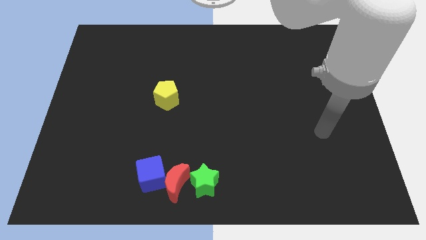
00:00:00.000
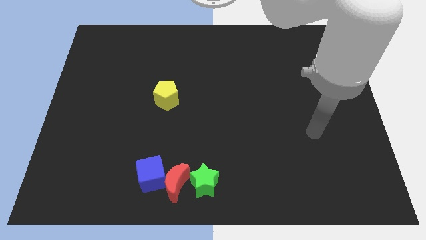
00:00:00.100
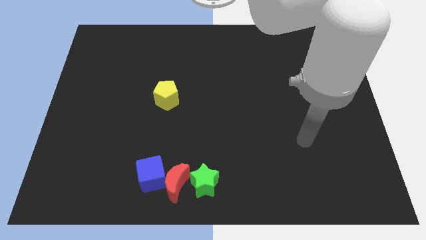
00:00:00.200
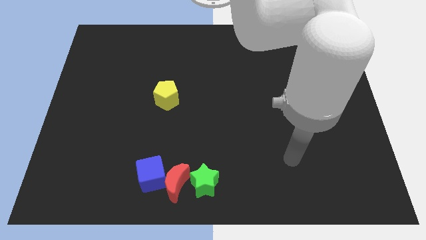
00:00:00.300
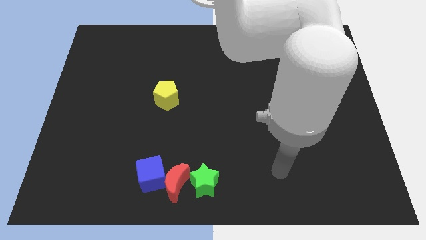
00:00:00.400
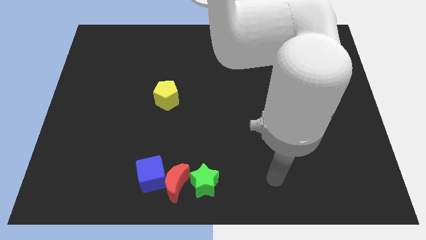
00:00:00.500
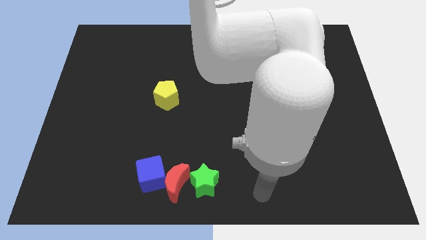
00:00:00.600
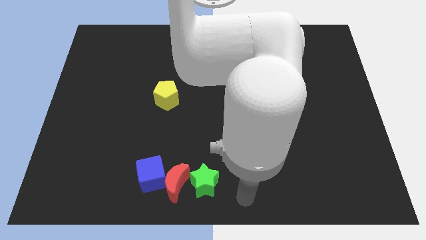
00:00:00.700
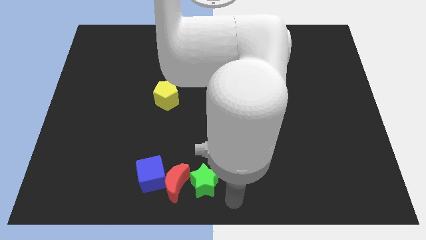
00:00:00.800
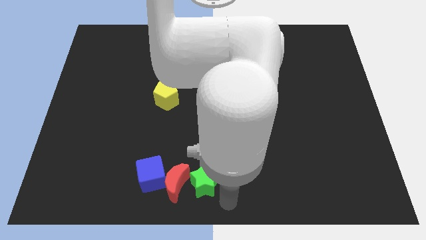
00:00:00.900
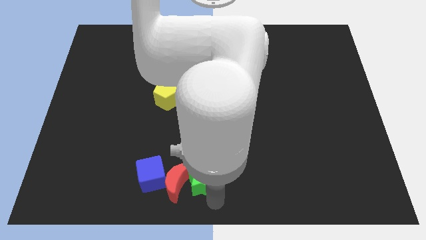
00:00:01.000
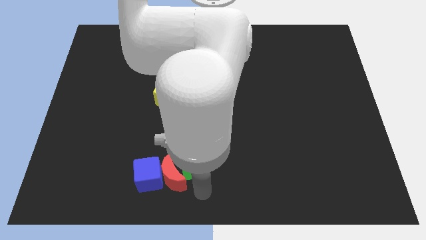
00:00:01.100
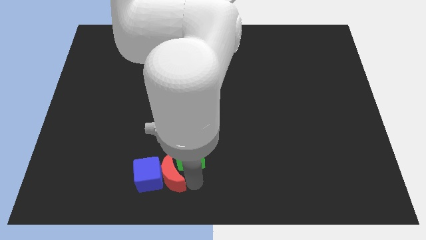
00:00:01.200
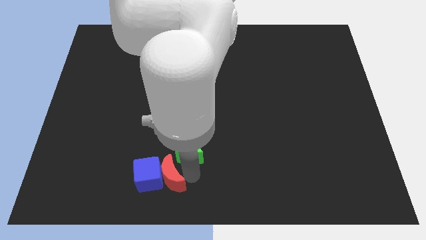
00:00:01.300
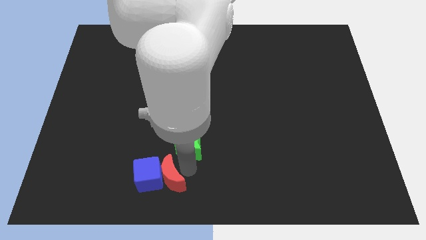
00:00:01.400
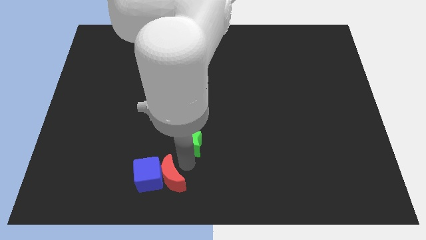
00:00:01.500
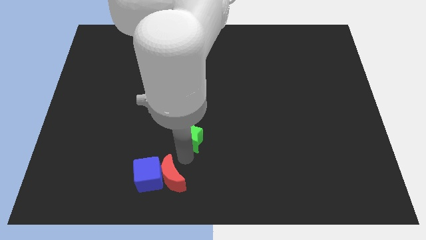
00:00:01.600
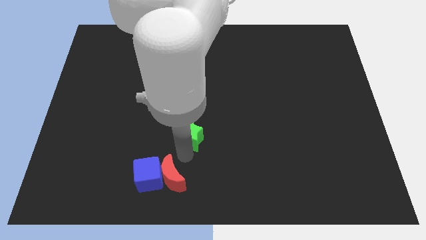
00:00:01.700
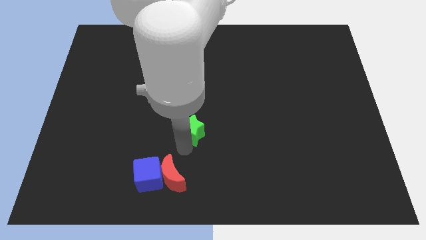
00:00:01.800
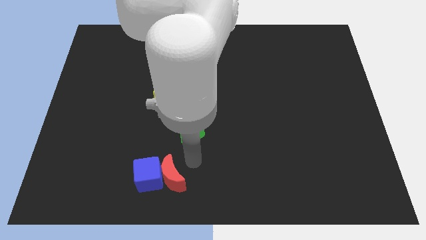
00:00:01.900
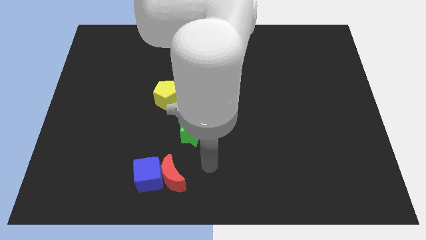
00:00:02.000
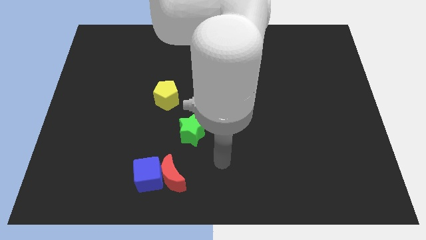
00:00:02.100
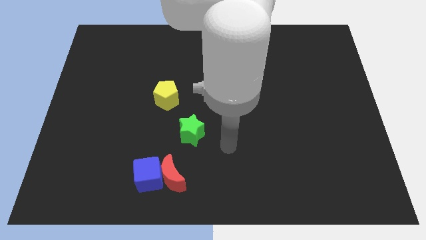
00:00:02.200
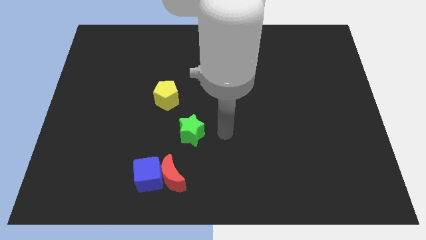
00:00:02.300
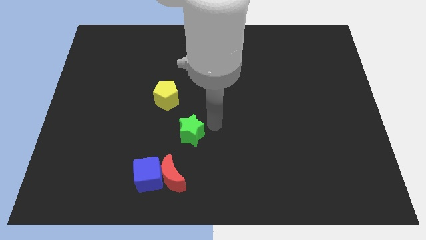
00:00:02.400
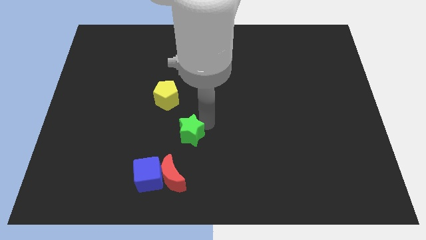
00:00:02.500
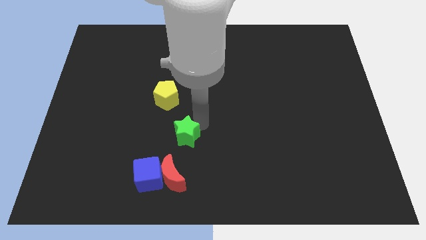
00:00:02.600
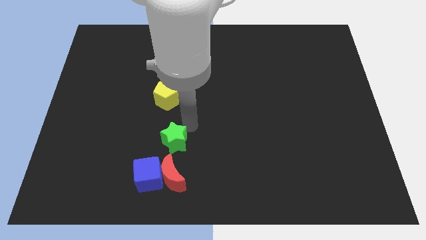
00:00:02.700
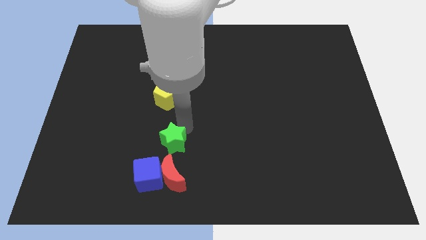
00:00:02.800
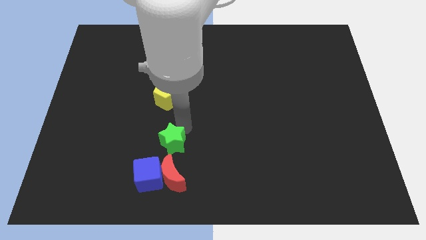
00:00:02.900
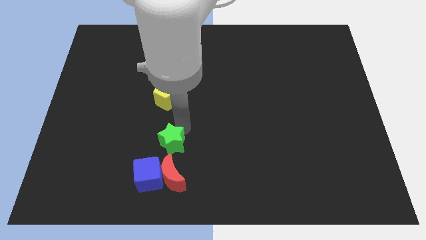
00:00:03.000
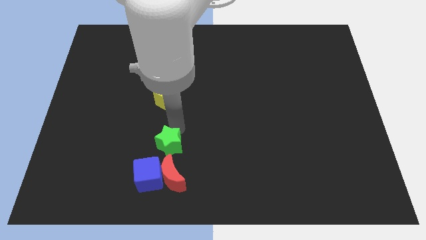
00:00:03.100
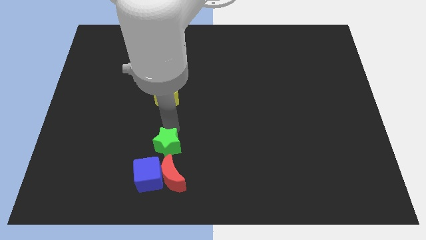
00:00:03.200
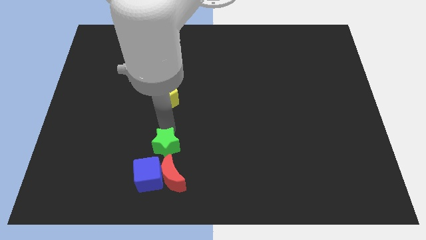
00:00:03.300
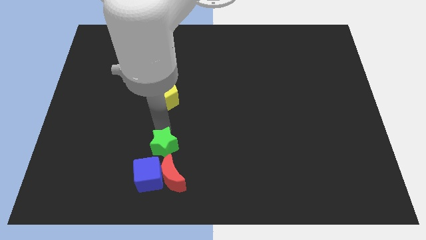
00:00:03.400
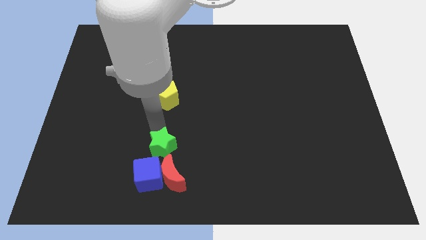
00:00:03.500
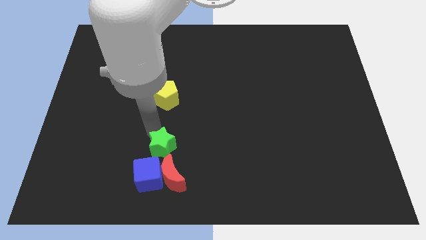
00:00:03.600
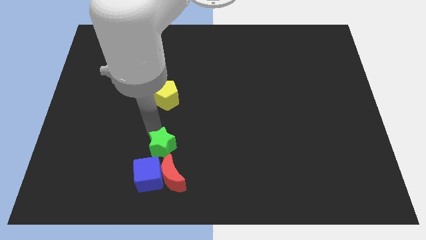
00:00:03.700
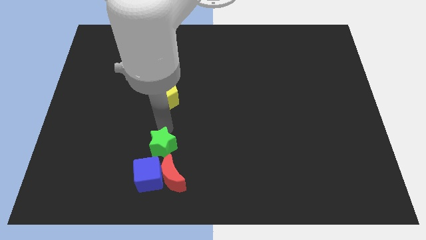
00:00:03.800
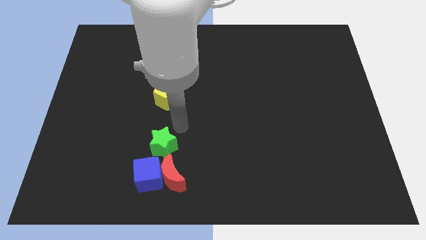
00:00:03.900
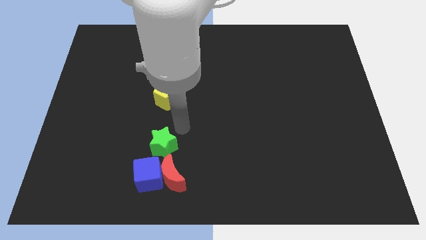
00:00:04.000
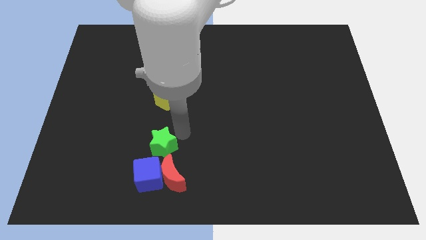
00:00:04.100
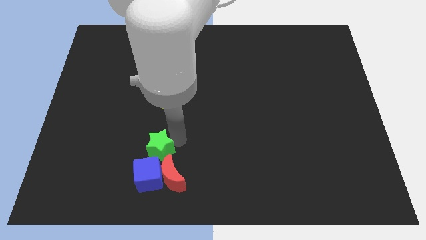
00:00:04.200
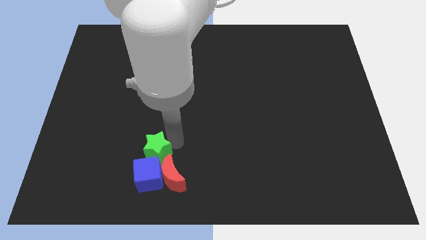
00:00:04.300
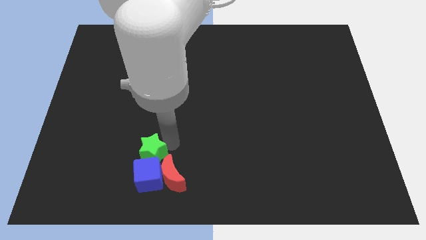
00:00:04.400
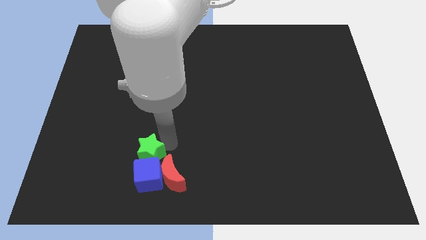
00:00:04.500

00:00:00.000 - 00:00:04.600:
push the green block to the blue cube

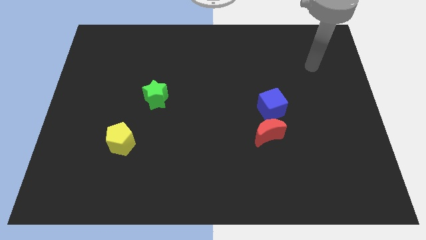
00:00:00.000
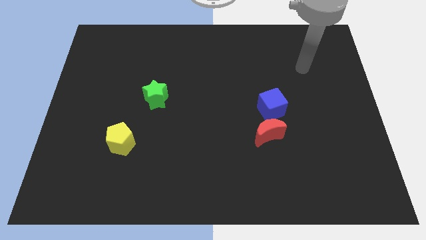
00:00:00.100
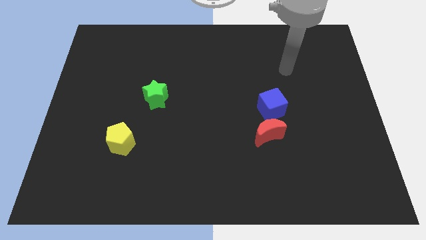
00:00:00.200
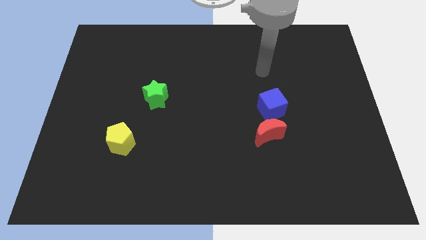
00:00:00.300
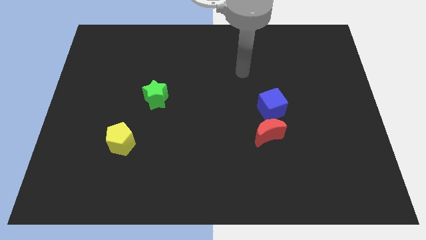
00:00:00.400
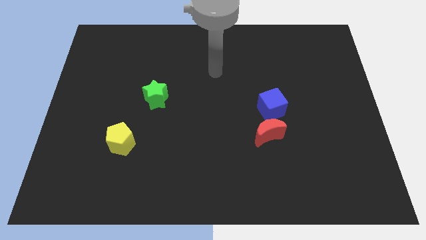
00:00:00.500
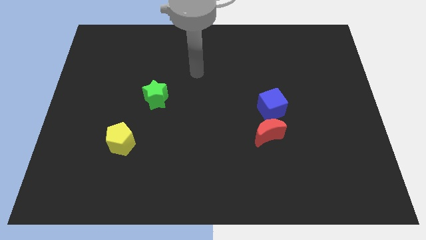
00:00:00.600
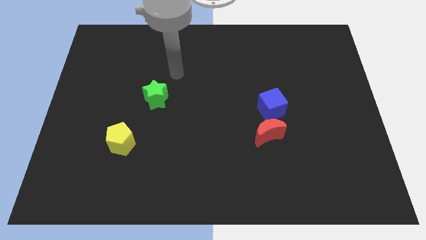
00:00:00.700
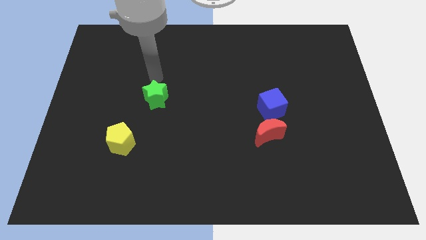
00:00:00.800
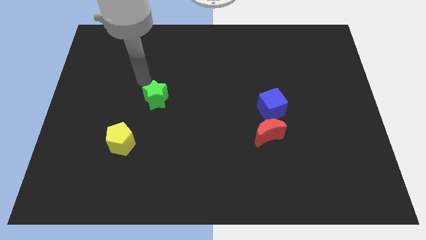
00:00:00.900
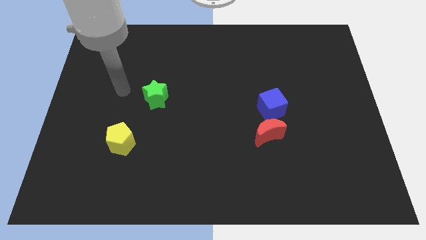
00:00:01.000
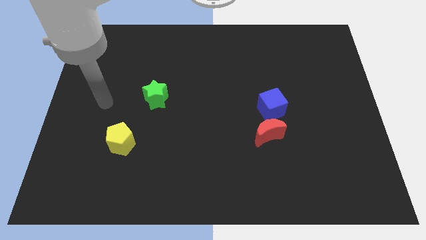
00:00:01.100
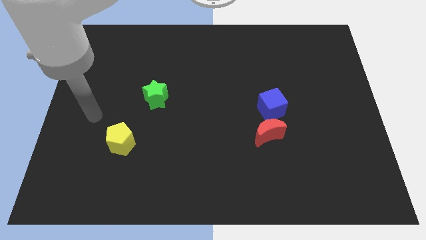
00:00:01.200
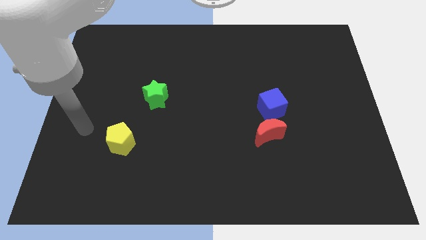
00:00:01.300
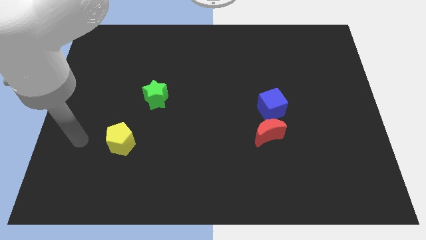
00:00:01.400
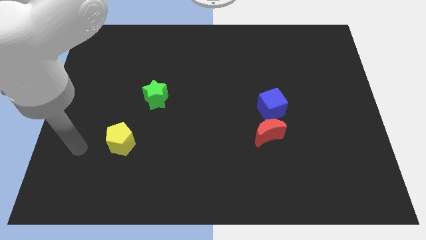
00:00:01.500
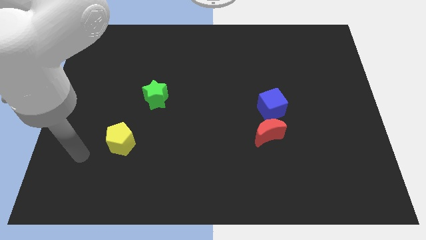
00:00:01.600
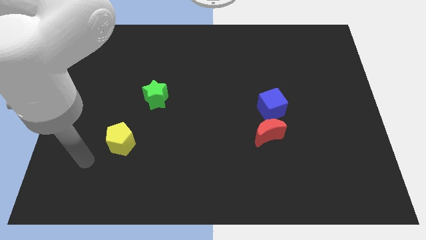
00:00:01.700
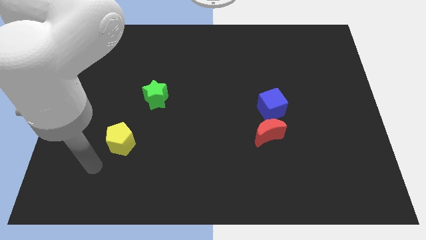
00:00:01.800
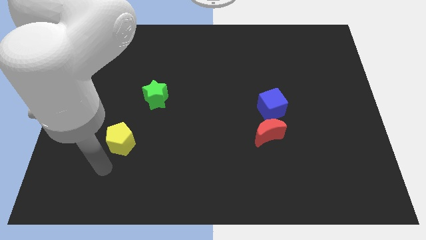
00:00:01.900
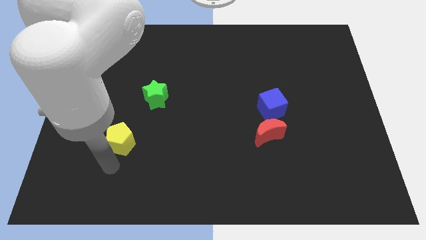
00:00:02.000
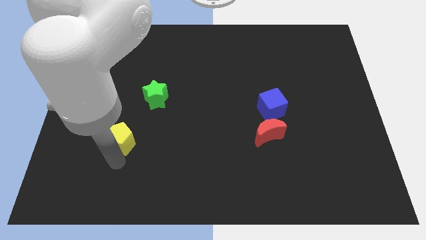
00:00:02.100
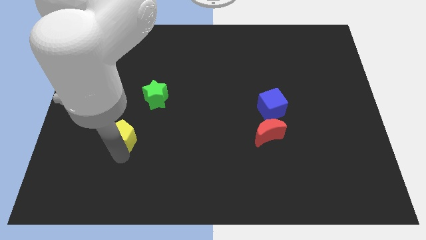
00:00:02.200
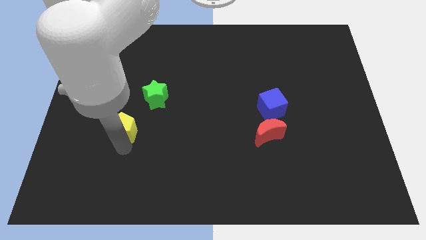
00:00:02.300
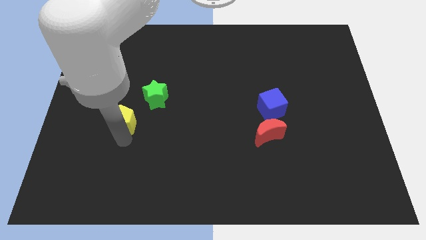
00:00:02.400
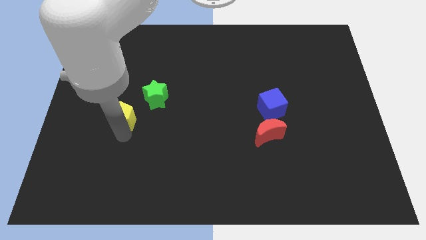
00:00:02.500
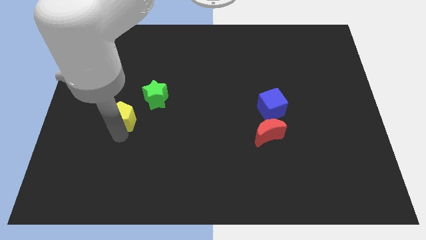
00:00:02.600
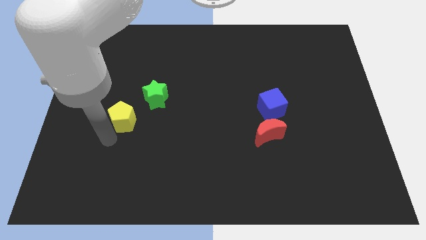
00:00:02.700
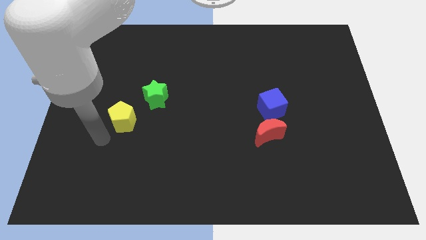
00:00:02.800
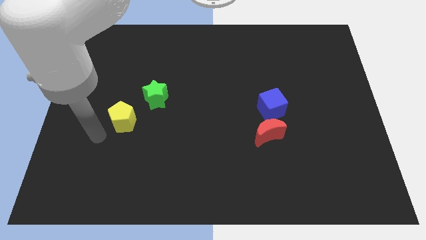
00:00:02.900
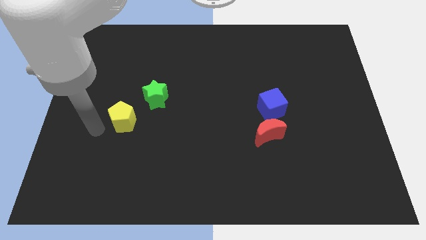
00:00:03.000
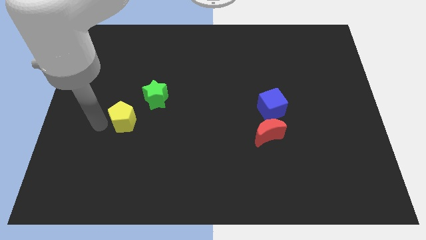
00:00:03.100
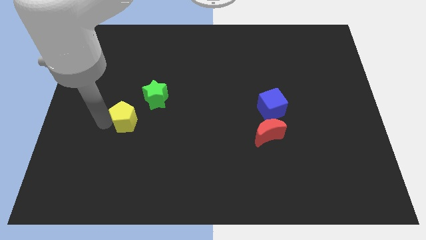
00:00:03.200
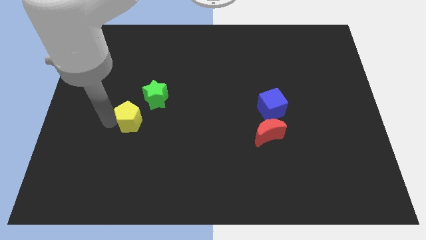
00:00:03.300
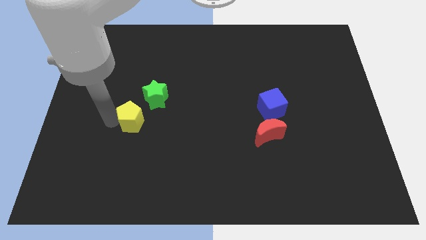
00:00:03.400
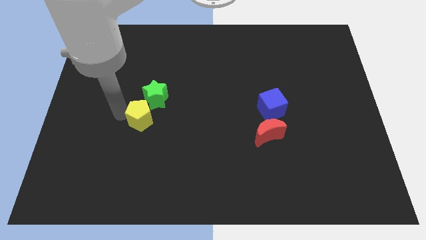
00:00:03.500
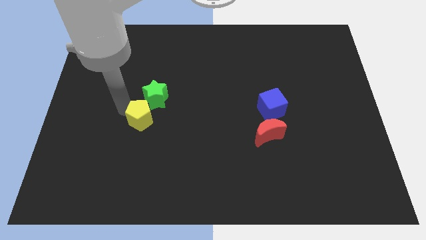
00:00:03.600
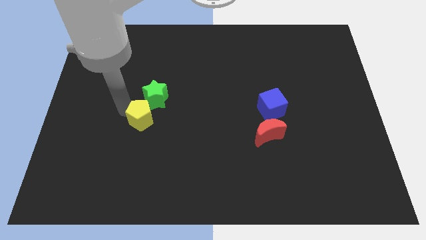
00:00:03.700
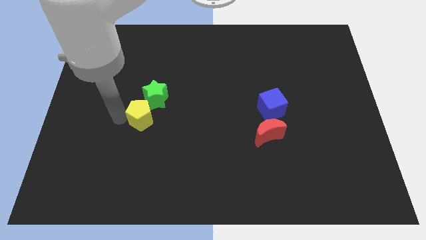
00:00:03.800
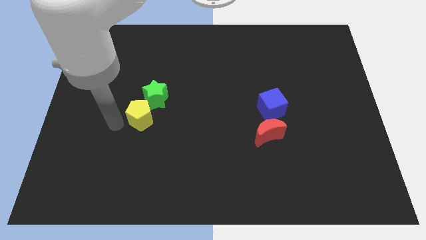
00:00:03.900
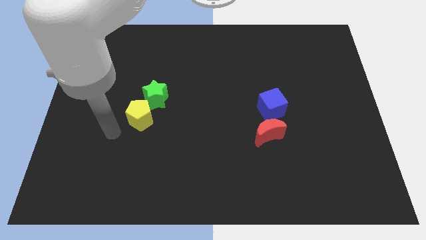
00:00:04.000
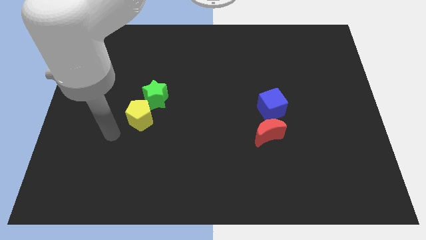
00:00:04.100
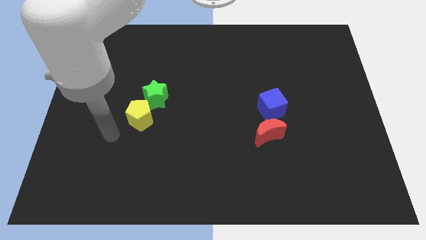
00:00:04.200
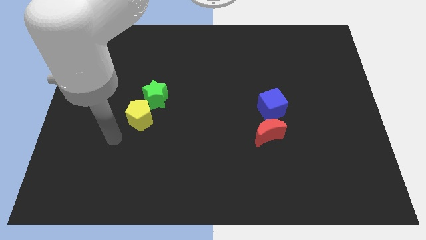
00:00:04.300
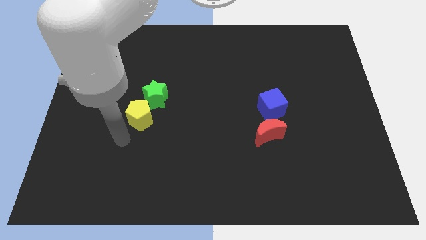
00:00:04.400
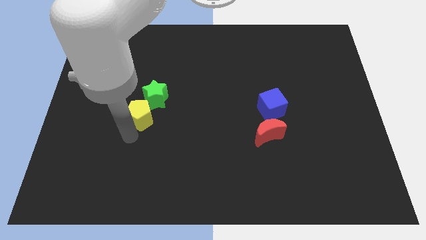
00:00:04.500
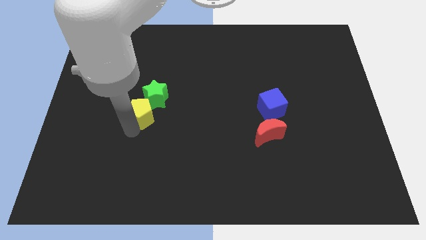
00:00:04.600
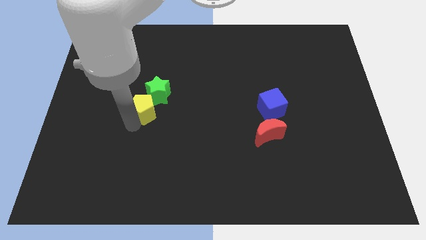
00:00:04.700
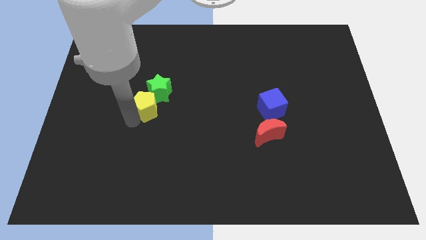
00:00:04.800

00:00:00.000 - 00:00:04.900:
push the yellow block towards the green star
